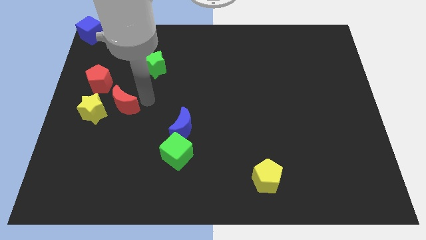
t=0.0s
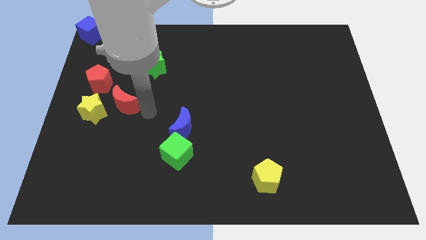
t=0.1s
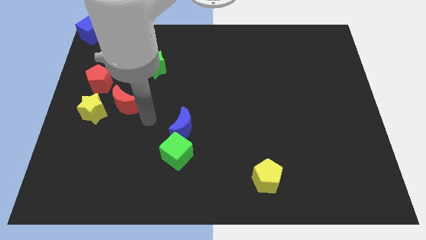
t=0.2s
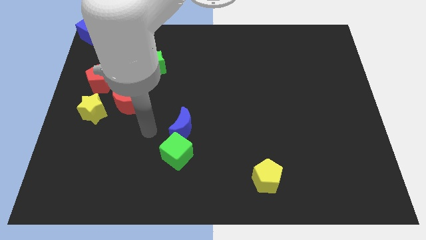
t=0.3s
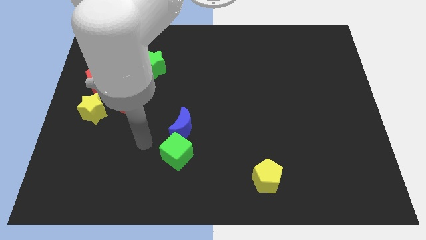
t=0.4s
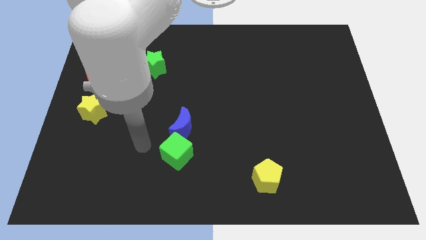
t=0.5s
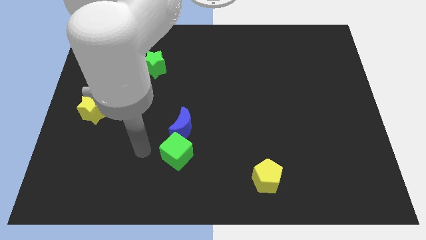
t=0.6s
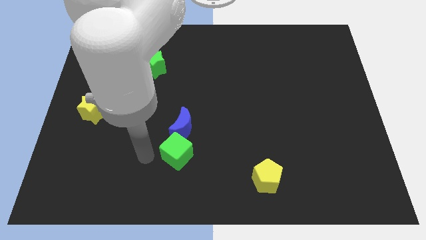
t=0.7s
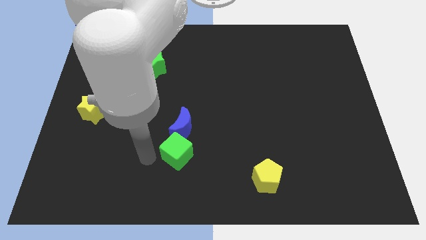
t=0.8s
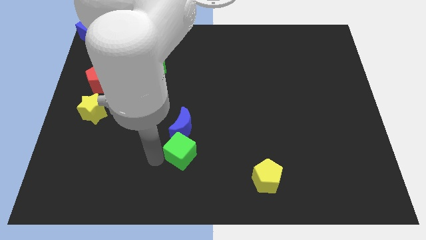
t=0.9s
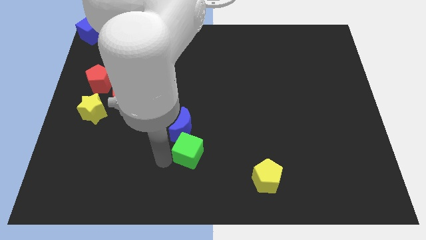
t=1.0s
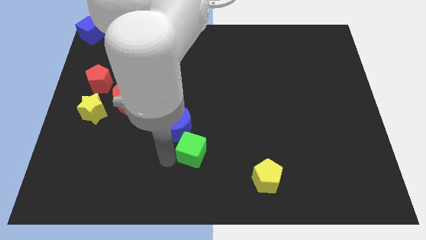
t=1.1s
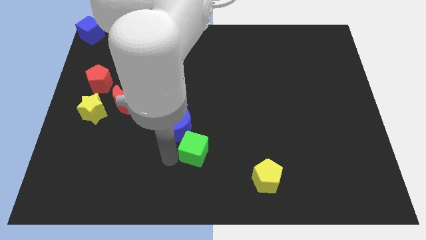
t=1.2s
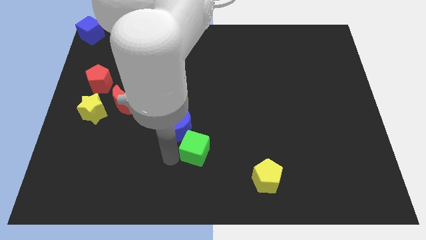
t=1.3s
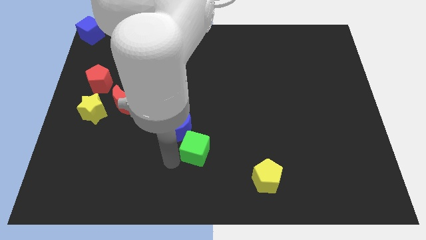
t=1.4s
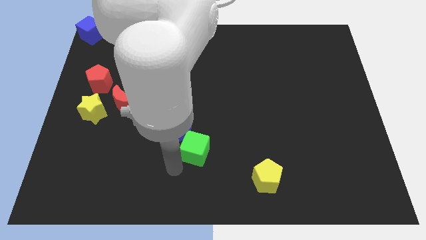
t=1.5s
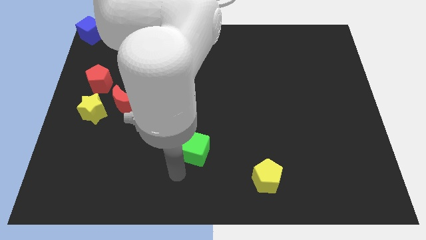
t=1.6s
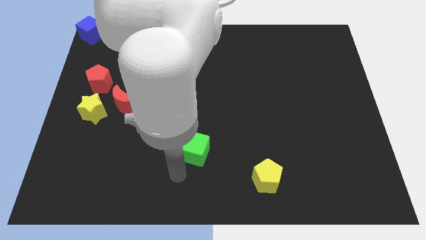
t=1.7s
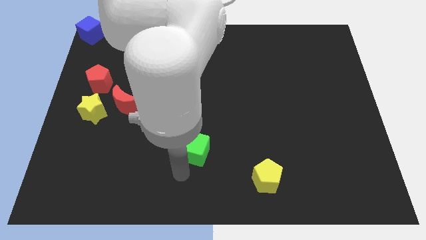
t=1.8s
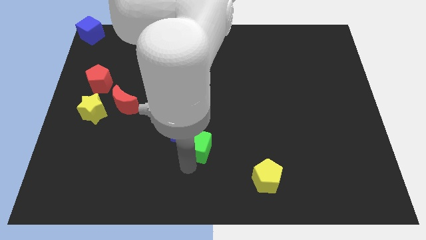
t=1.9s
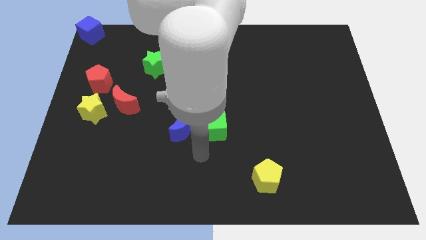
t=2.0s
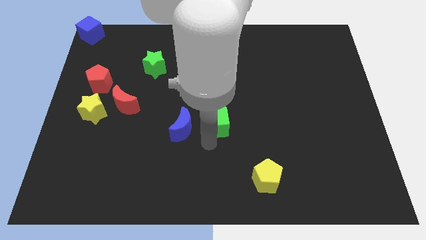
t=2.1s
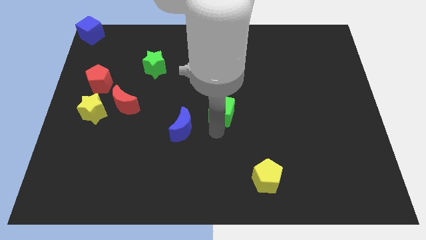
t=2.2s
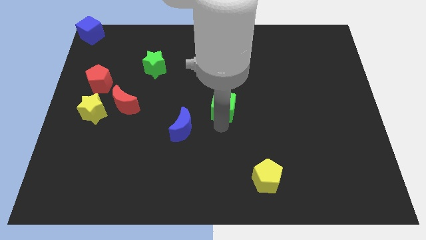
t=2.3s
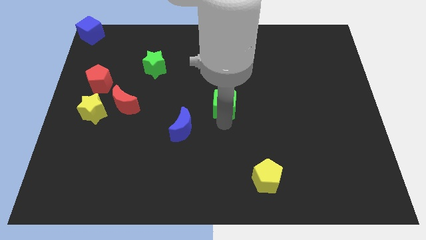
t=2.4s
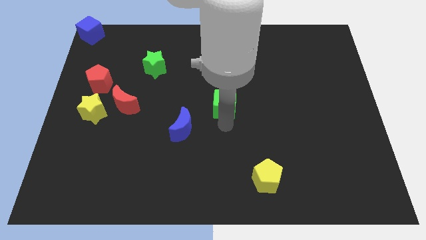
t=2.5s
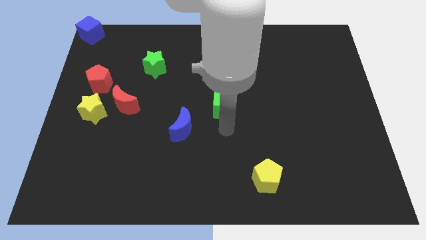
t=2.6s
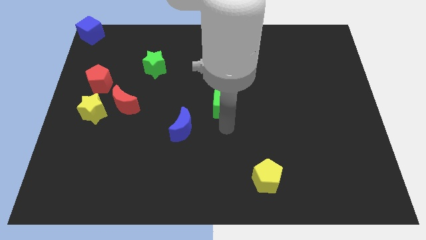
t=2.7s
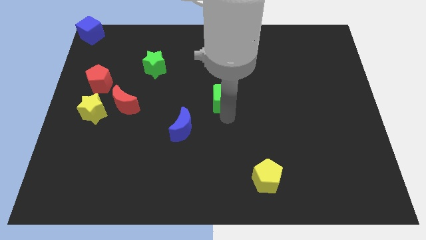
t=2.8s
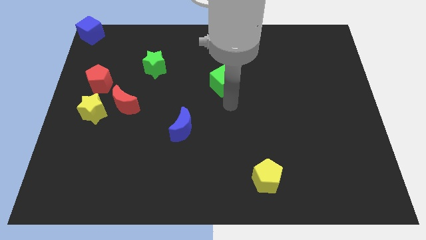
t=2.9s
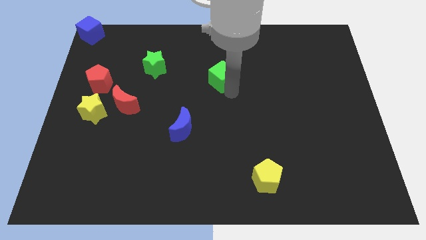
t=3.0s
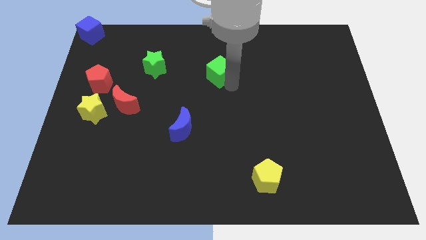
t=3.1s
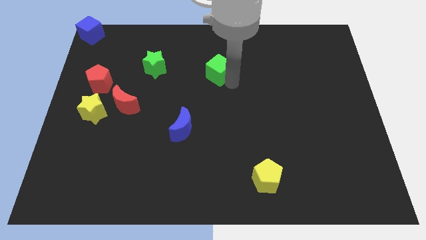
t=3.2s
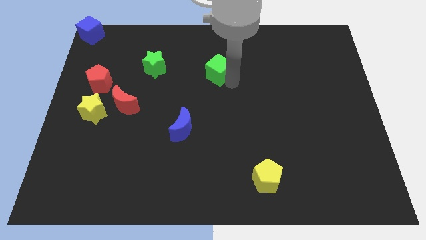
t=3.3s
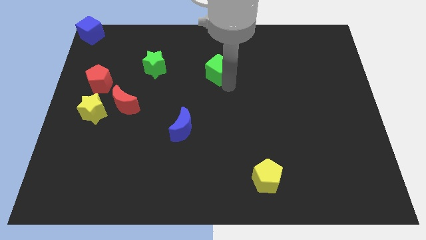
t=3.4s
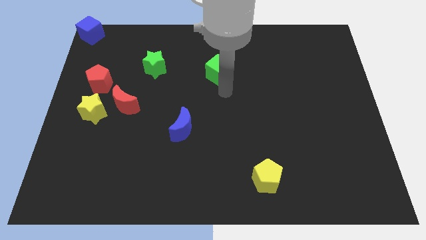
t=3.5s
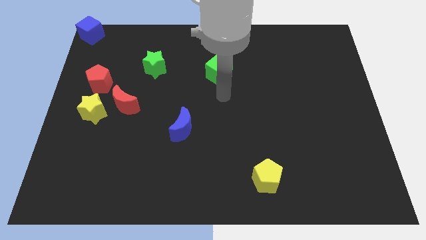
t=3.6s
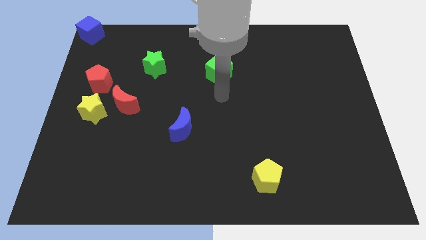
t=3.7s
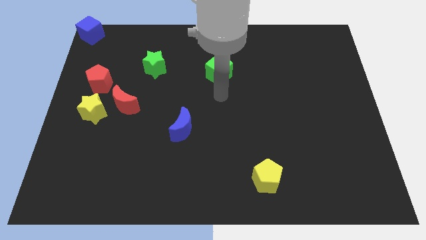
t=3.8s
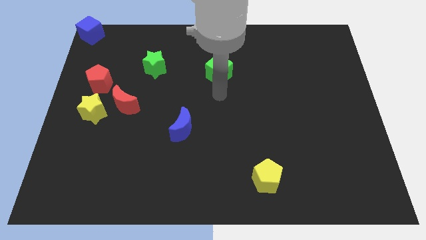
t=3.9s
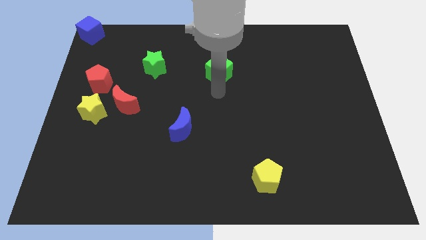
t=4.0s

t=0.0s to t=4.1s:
move the green cube to the center

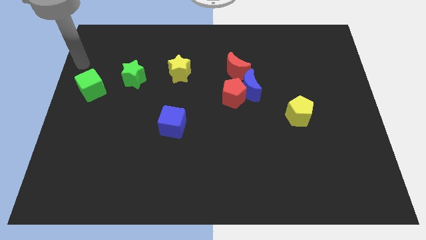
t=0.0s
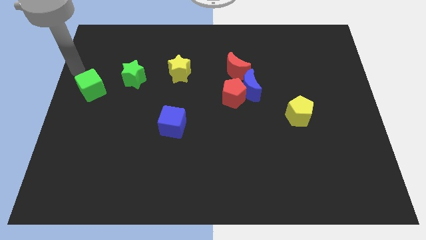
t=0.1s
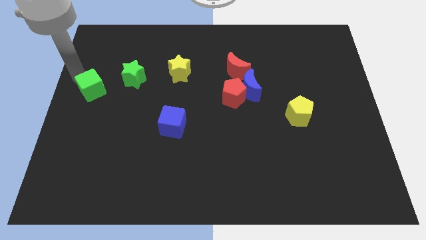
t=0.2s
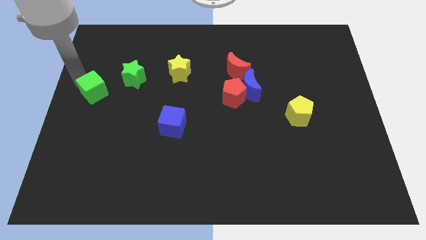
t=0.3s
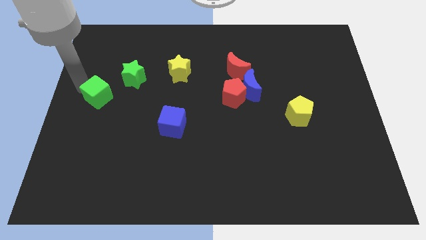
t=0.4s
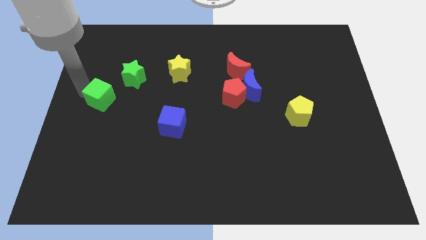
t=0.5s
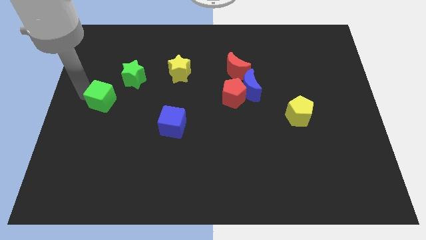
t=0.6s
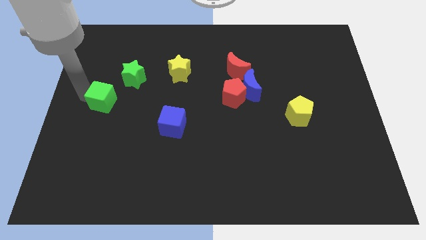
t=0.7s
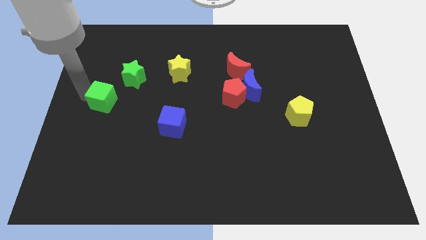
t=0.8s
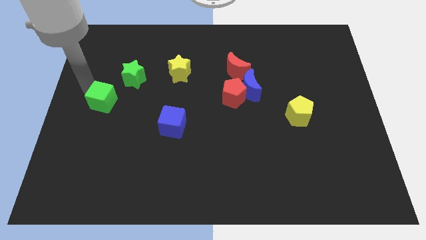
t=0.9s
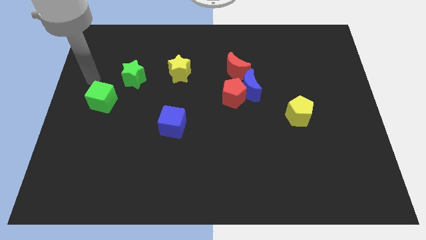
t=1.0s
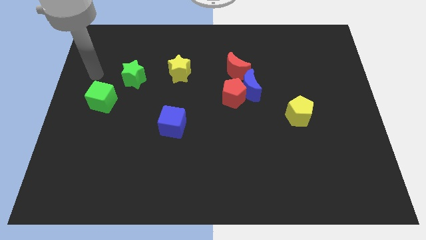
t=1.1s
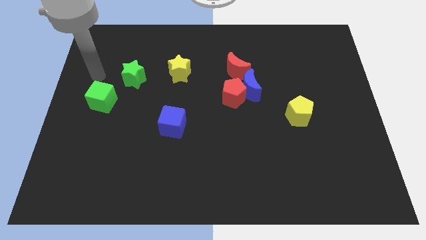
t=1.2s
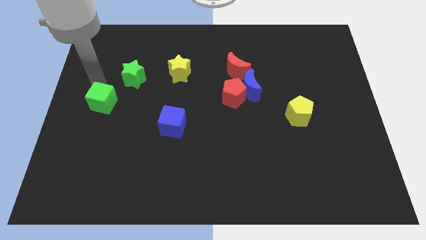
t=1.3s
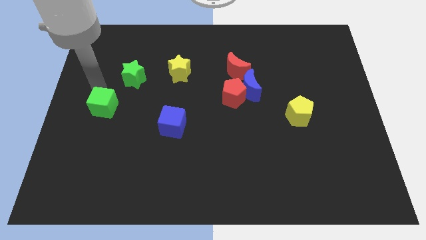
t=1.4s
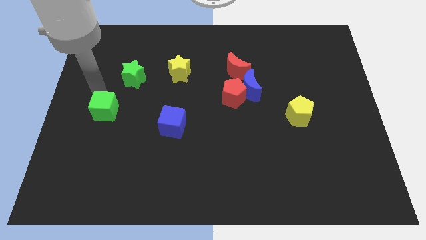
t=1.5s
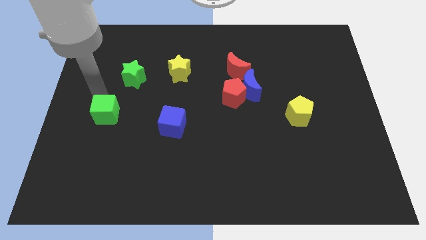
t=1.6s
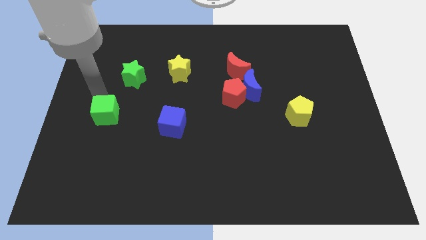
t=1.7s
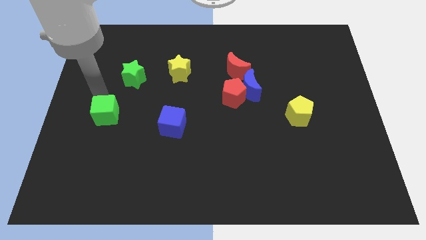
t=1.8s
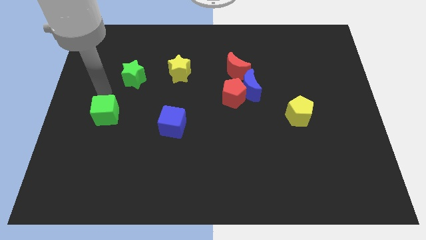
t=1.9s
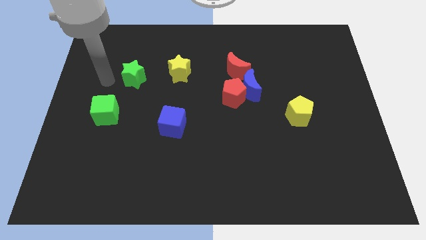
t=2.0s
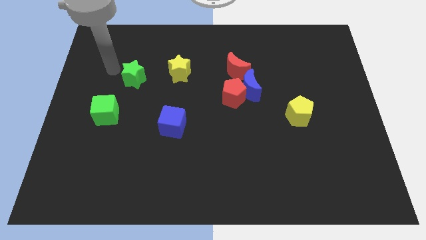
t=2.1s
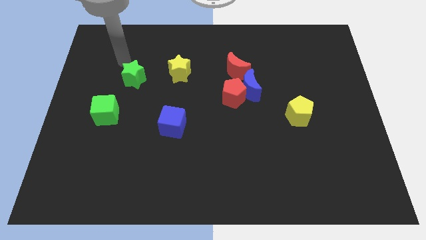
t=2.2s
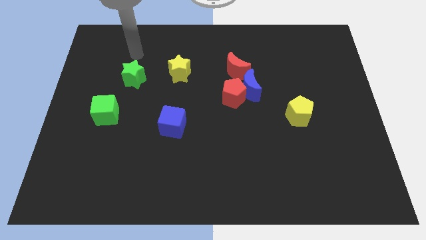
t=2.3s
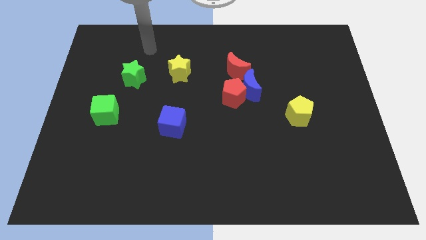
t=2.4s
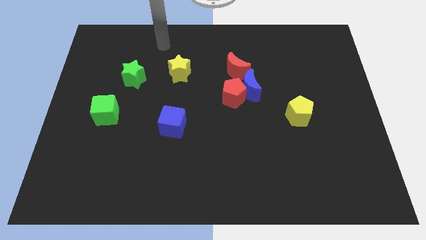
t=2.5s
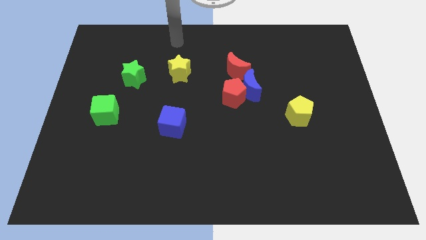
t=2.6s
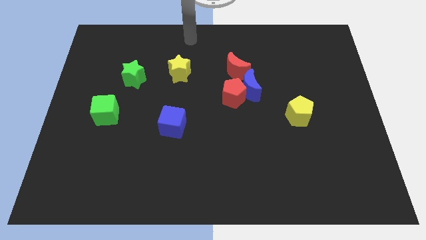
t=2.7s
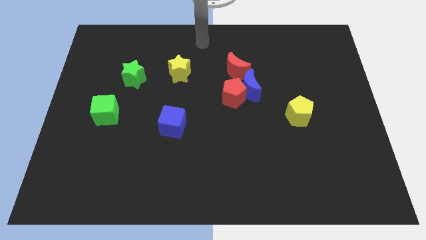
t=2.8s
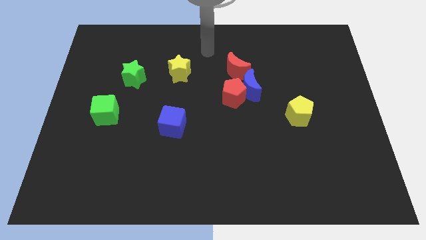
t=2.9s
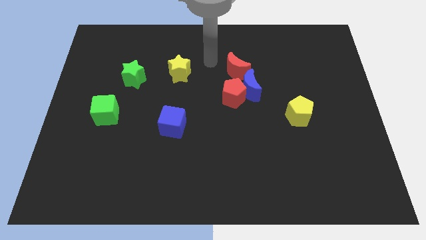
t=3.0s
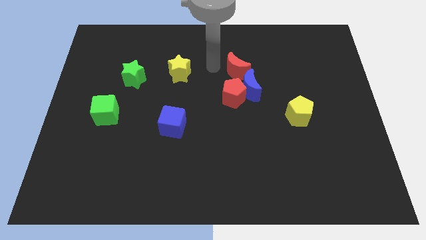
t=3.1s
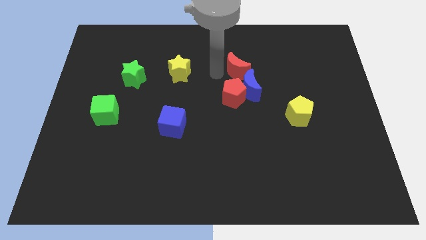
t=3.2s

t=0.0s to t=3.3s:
move the green cube to the center left

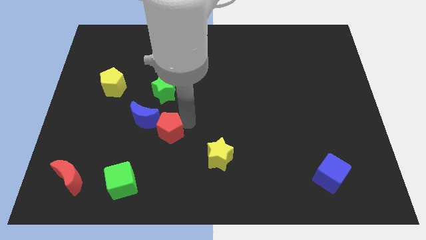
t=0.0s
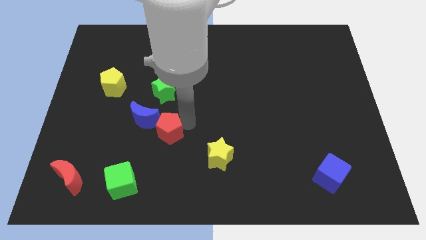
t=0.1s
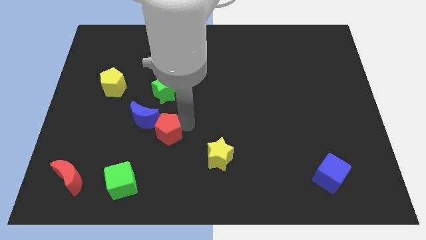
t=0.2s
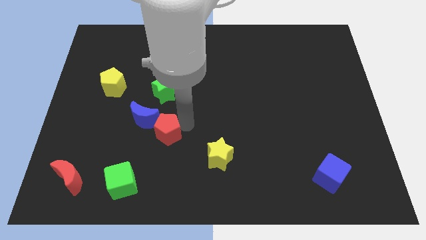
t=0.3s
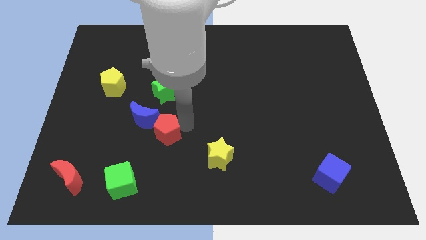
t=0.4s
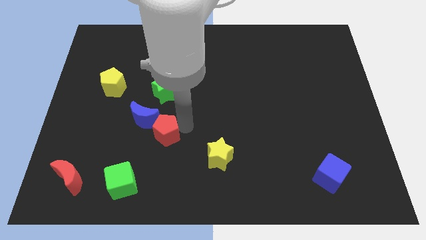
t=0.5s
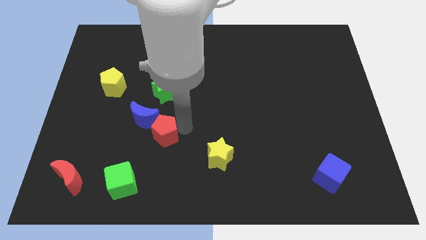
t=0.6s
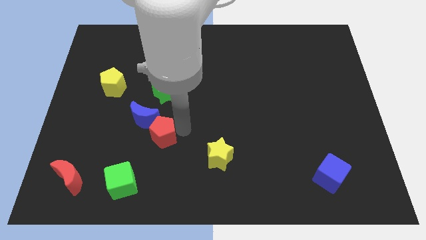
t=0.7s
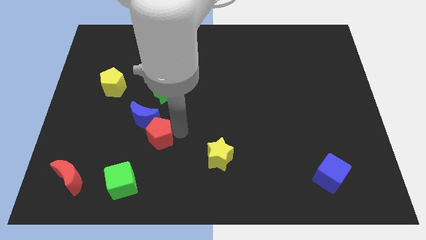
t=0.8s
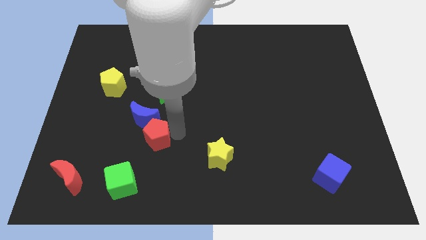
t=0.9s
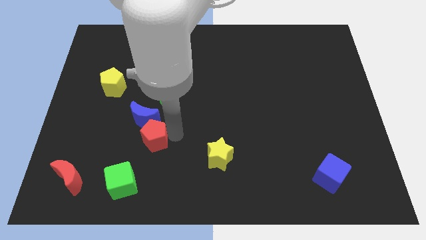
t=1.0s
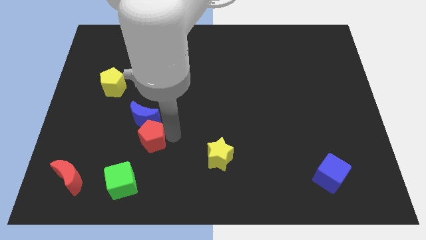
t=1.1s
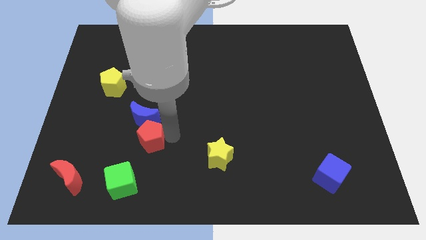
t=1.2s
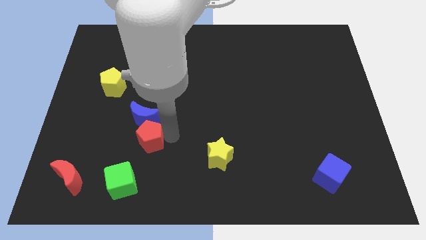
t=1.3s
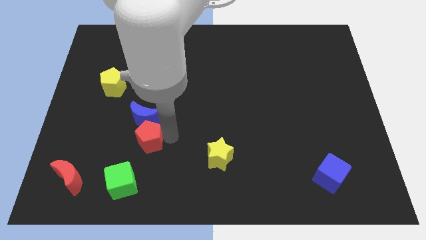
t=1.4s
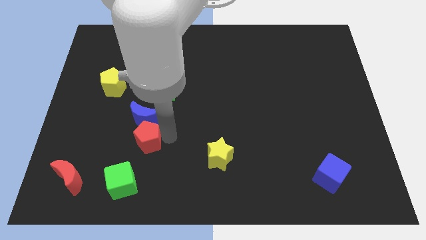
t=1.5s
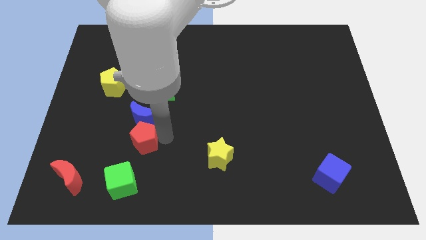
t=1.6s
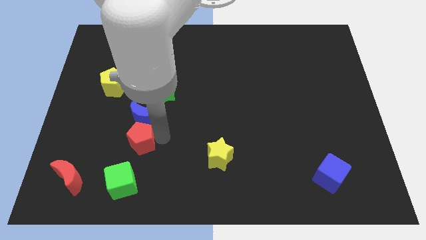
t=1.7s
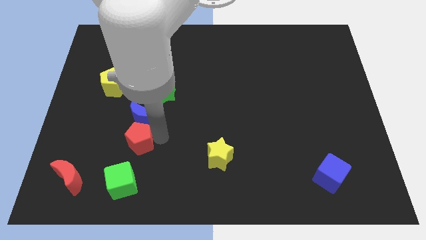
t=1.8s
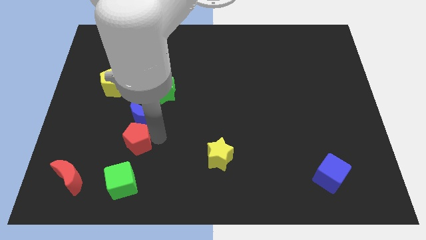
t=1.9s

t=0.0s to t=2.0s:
put the red pentagon vertically below the blue moon
